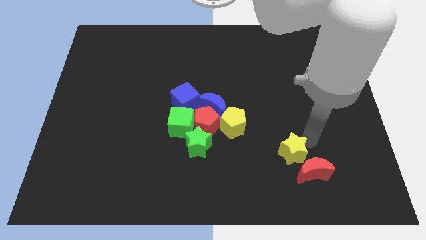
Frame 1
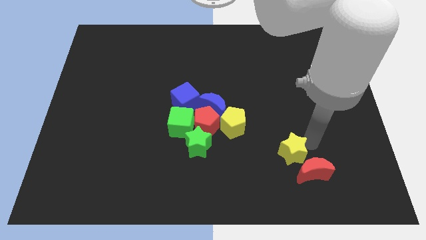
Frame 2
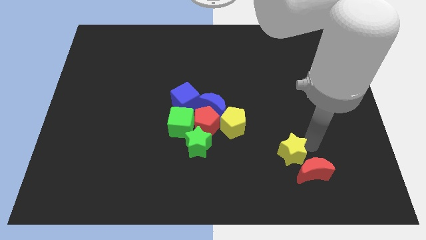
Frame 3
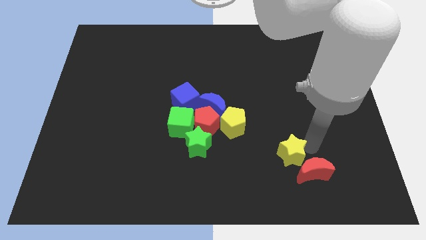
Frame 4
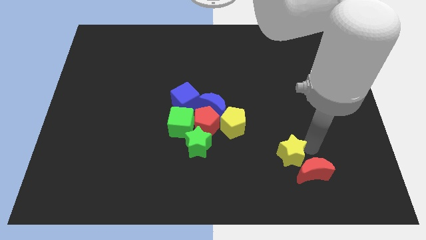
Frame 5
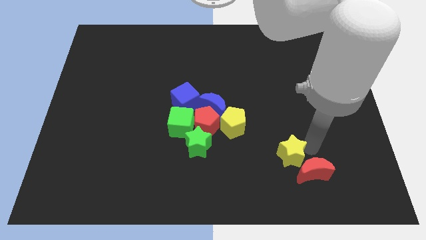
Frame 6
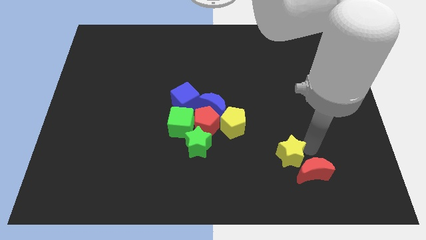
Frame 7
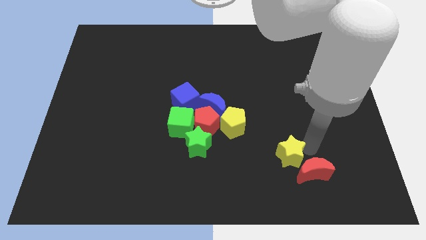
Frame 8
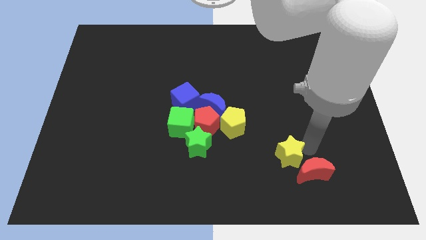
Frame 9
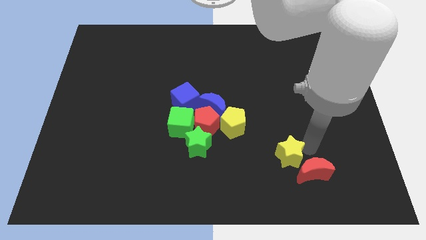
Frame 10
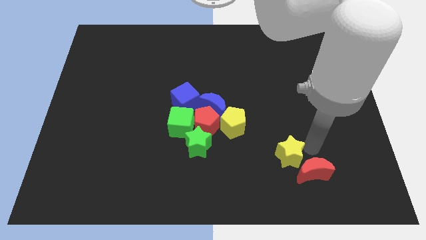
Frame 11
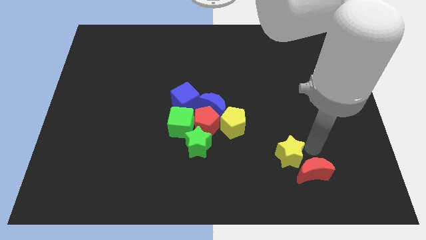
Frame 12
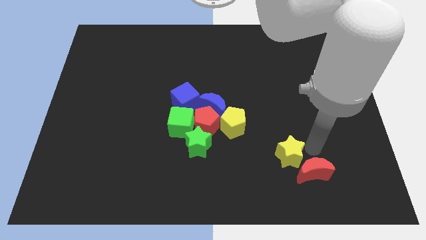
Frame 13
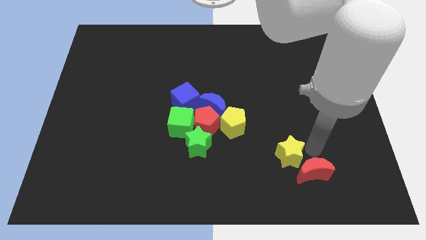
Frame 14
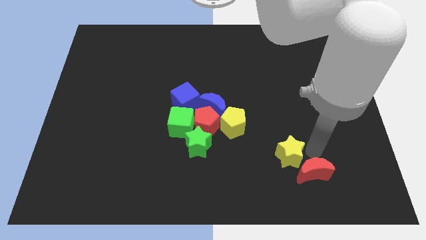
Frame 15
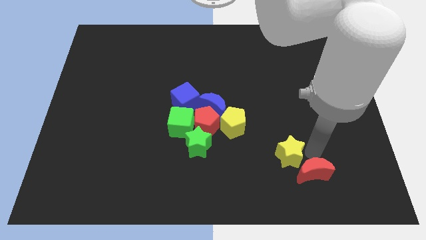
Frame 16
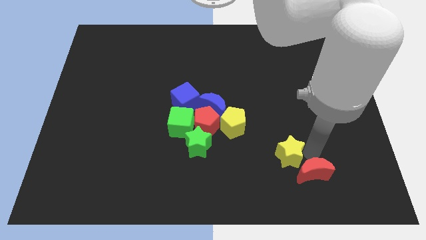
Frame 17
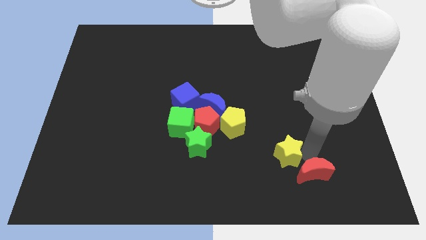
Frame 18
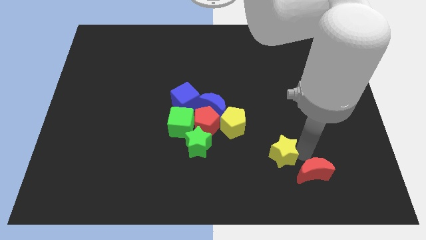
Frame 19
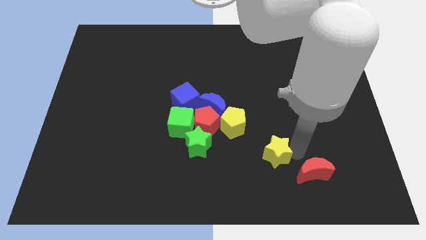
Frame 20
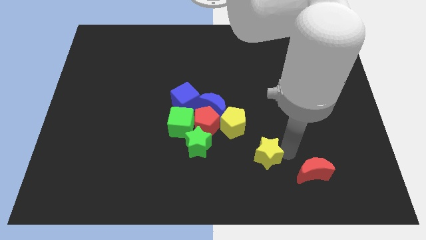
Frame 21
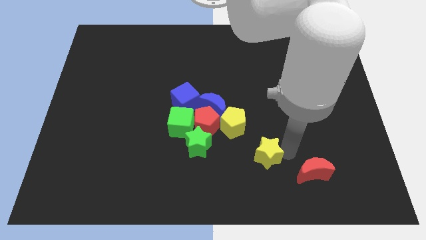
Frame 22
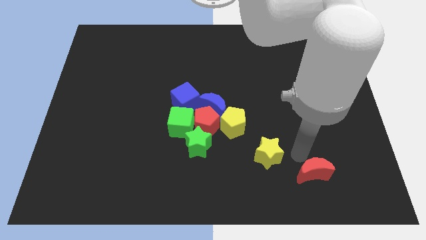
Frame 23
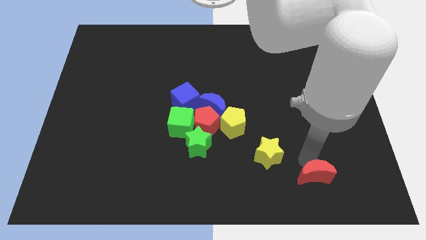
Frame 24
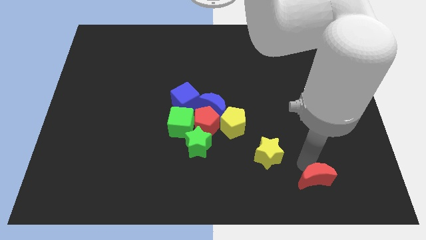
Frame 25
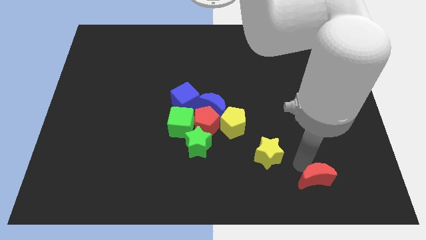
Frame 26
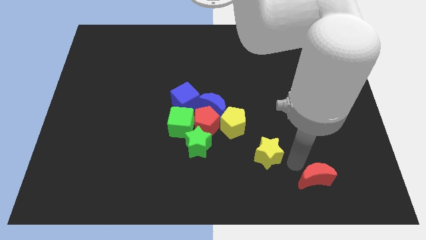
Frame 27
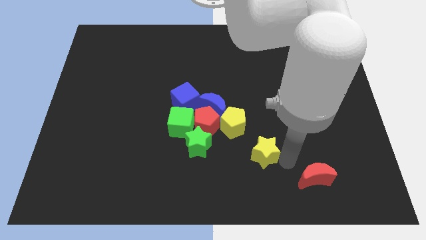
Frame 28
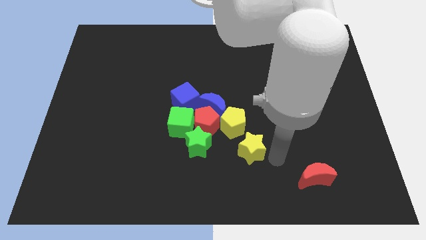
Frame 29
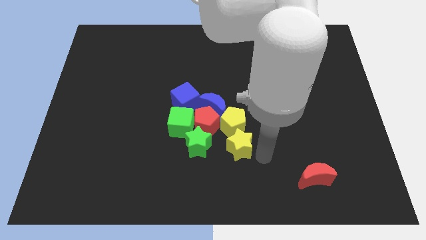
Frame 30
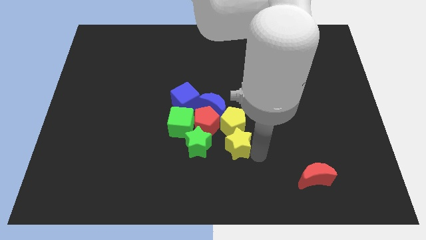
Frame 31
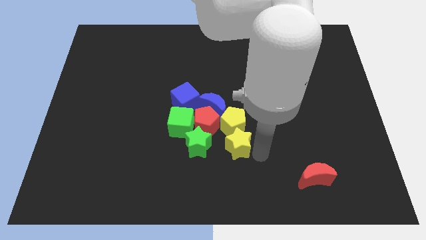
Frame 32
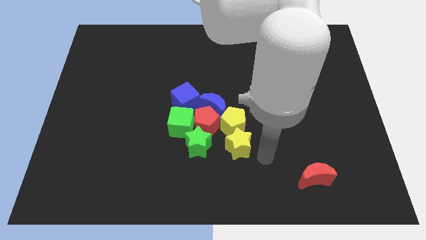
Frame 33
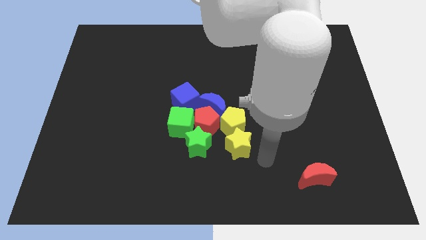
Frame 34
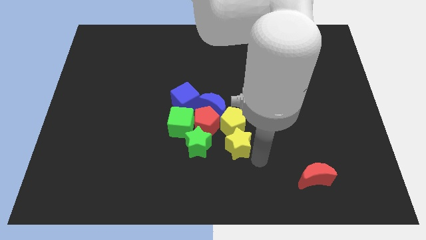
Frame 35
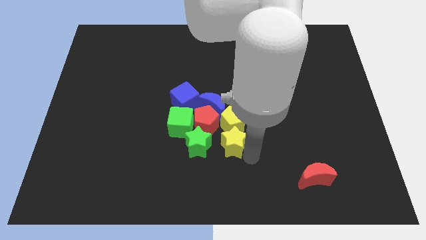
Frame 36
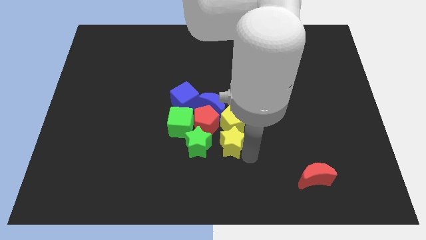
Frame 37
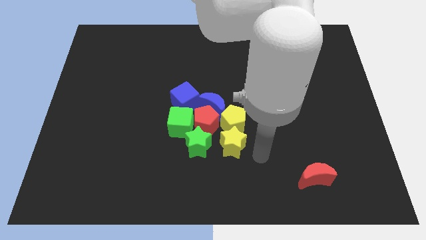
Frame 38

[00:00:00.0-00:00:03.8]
drag the yellow star into the bottom side of the yellow pentagon

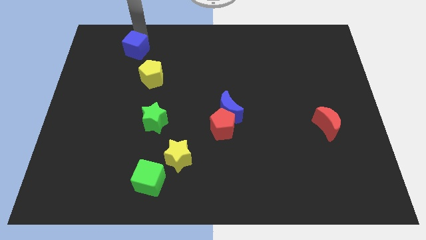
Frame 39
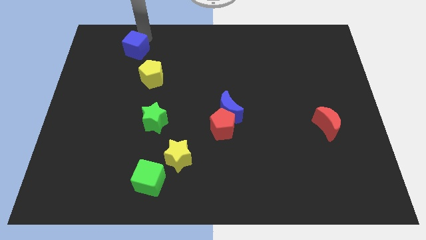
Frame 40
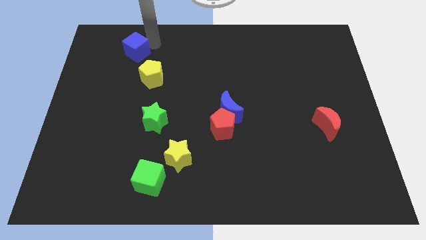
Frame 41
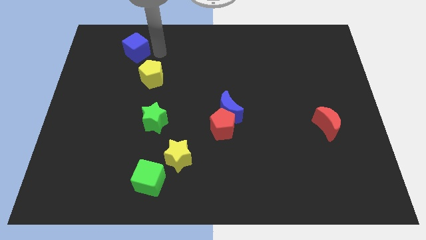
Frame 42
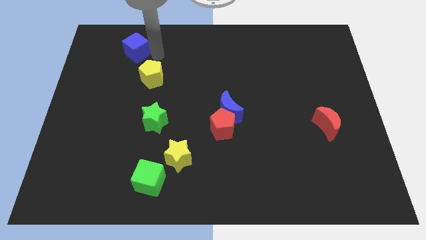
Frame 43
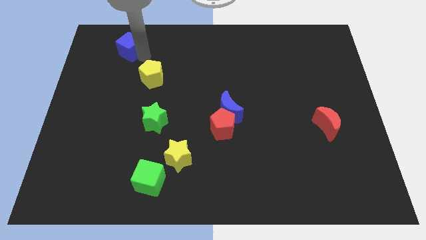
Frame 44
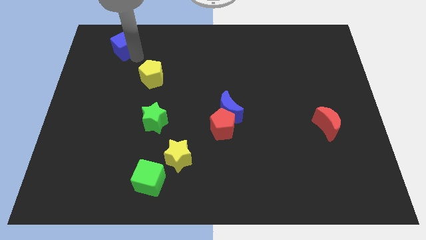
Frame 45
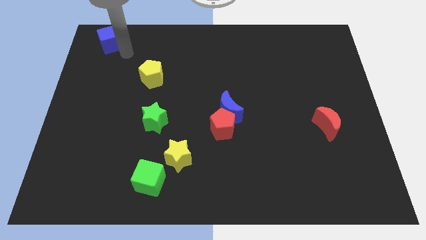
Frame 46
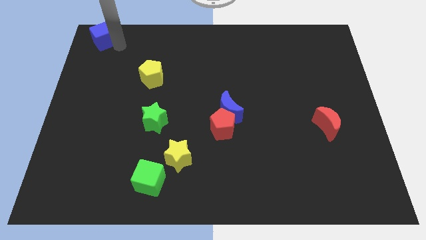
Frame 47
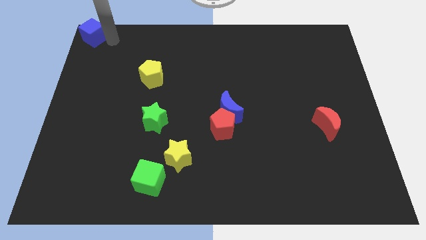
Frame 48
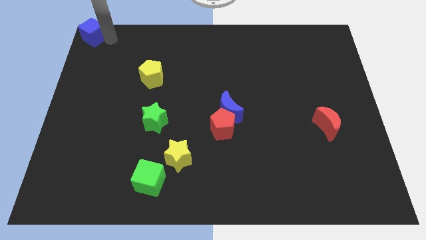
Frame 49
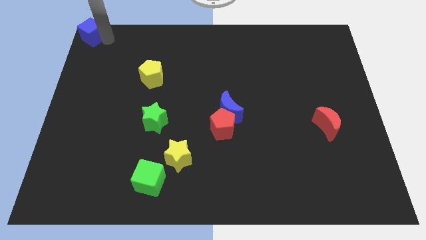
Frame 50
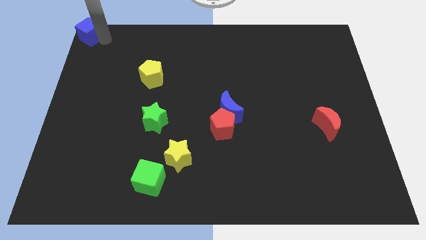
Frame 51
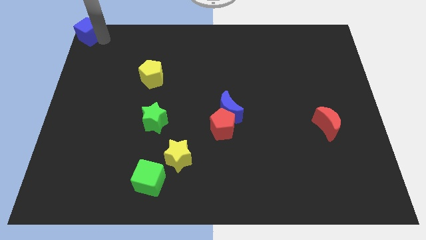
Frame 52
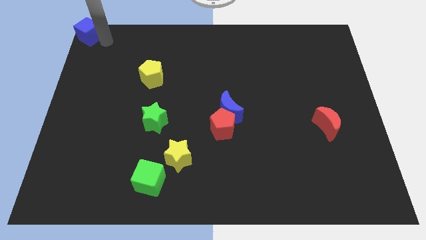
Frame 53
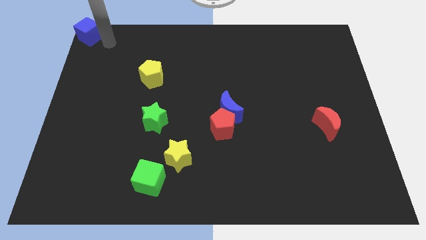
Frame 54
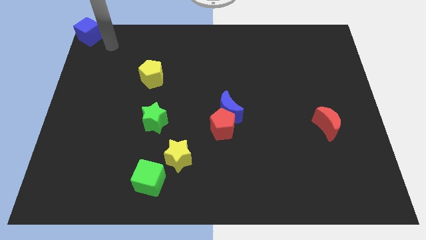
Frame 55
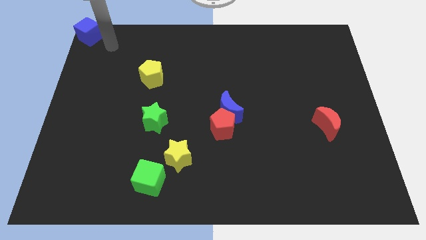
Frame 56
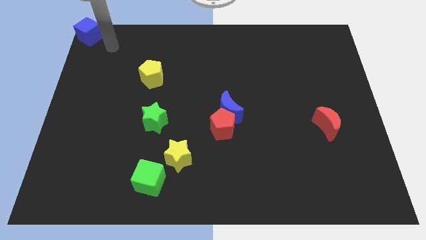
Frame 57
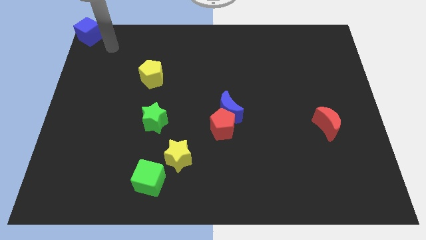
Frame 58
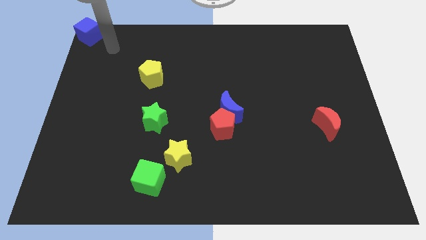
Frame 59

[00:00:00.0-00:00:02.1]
place blue cube to the top left corner

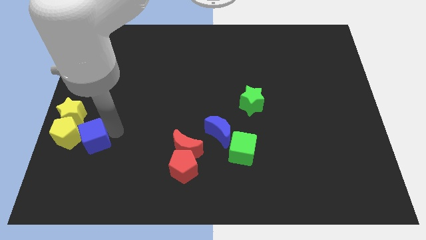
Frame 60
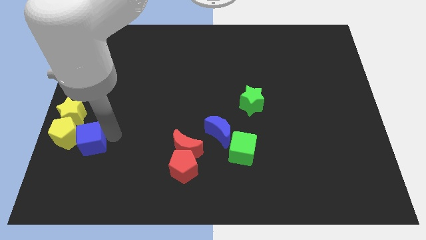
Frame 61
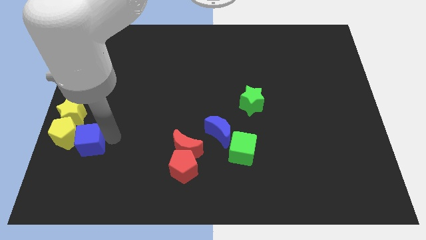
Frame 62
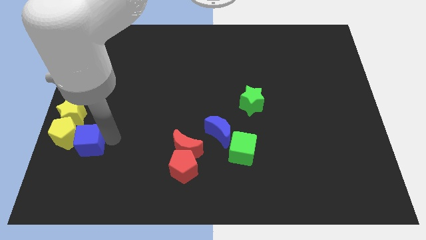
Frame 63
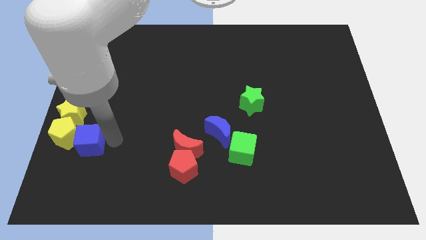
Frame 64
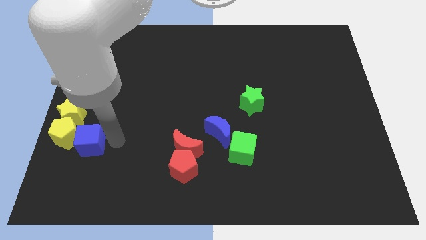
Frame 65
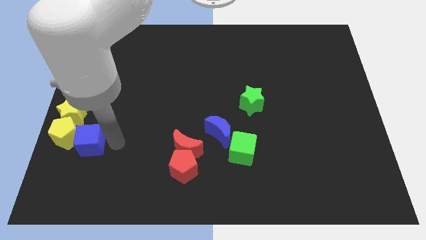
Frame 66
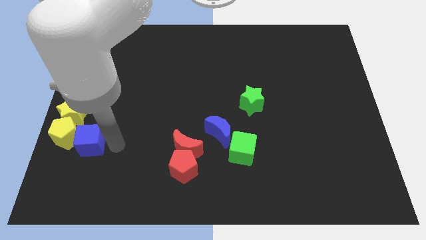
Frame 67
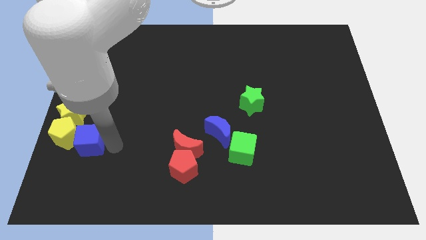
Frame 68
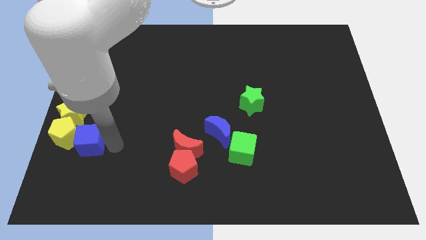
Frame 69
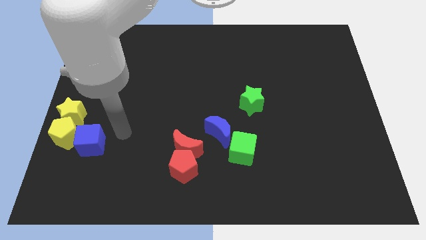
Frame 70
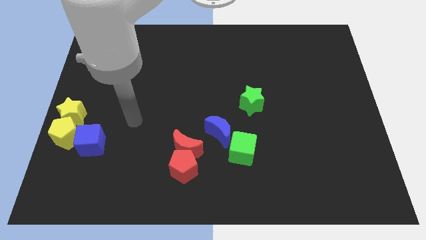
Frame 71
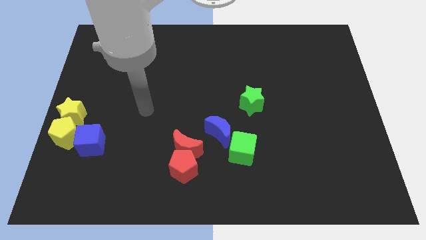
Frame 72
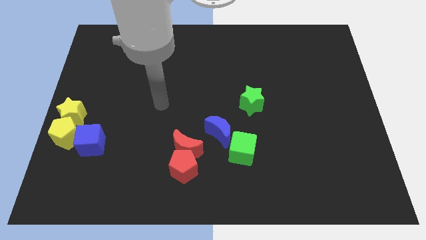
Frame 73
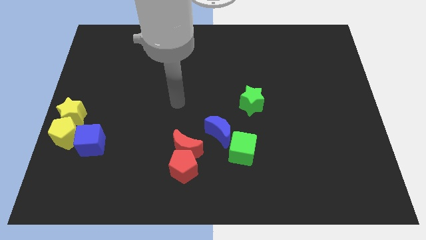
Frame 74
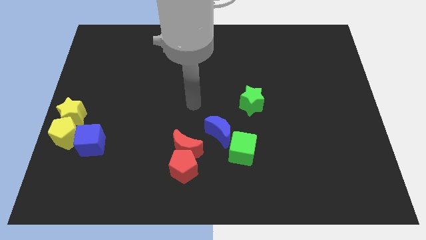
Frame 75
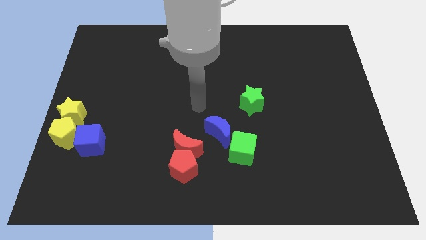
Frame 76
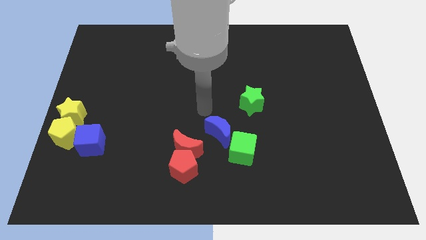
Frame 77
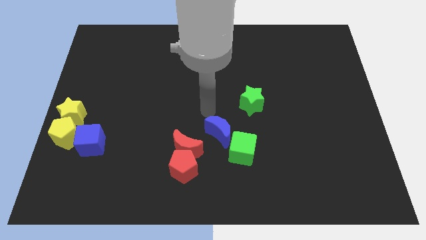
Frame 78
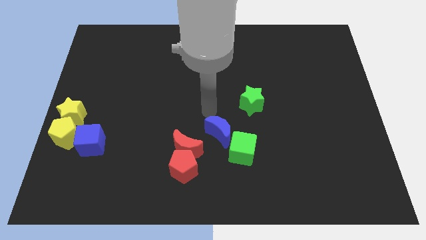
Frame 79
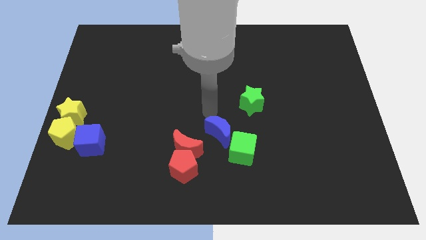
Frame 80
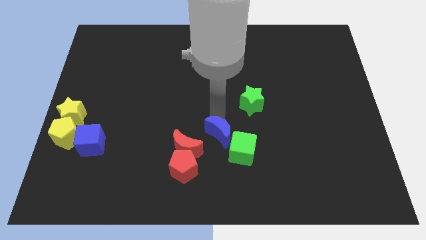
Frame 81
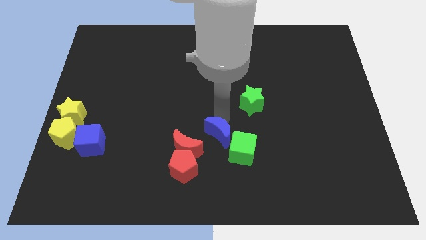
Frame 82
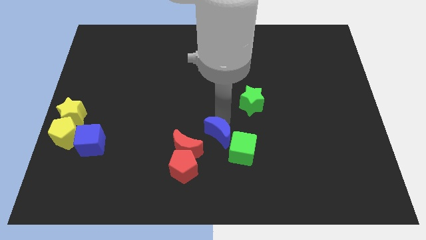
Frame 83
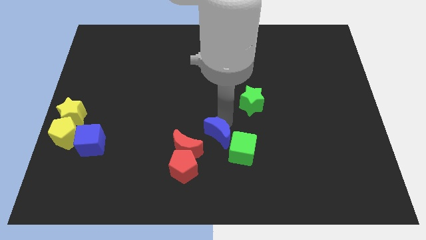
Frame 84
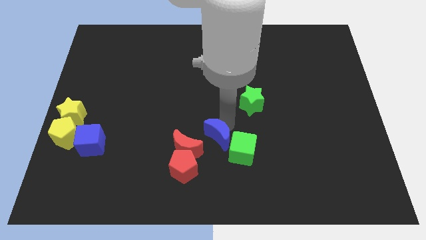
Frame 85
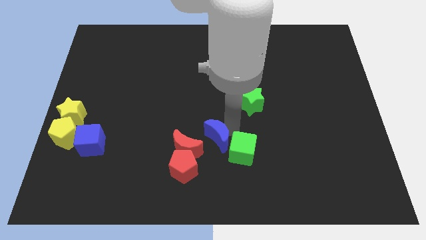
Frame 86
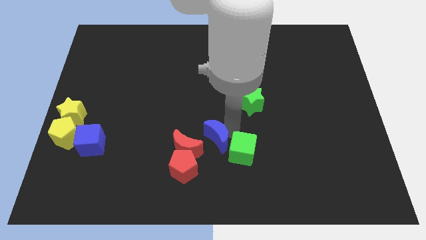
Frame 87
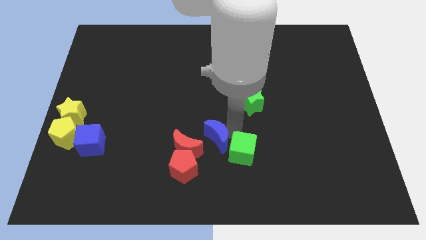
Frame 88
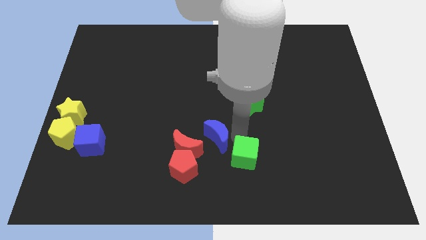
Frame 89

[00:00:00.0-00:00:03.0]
move the blue crescent to the left of the green cube

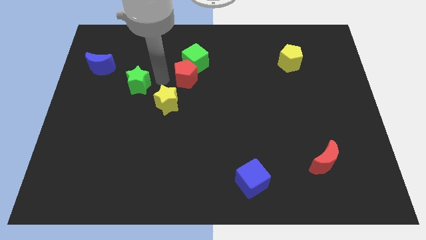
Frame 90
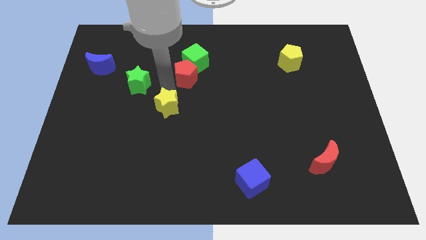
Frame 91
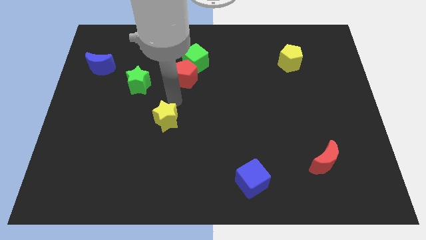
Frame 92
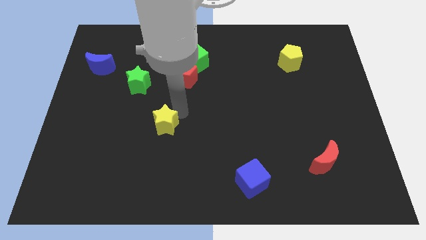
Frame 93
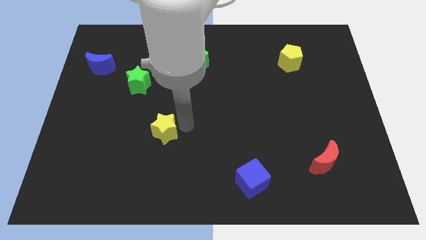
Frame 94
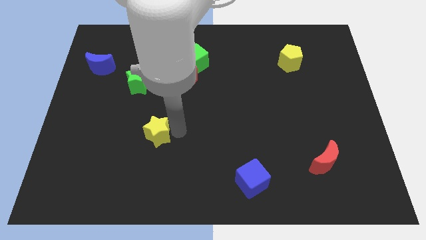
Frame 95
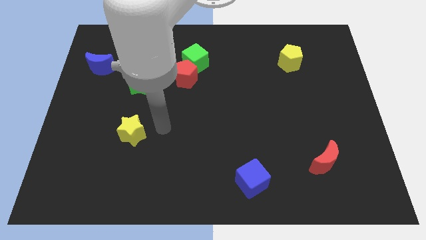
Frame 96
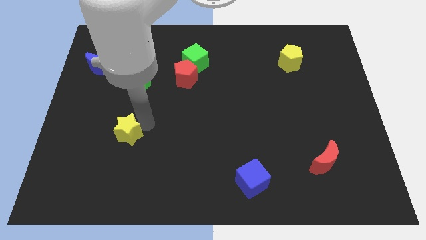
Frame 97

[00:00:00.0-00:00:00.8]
push yellow star below green star
